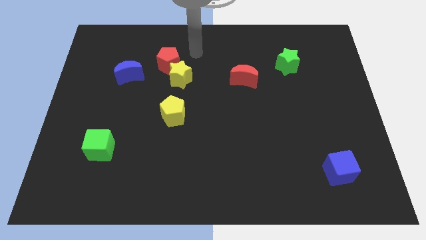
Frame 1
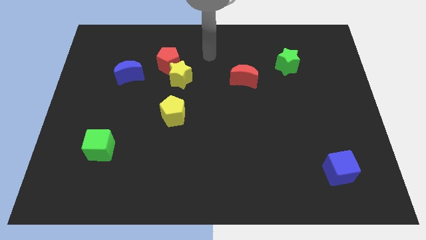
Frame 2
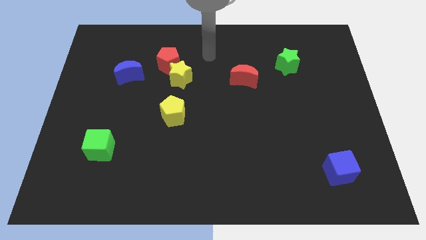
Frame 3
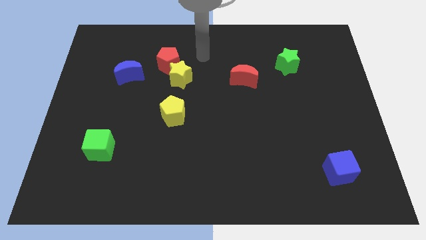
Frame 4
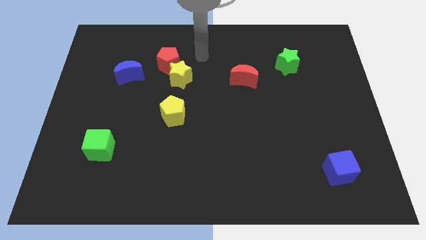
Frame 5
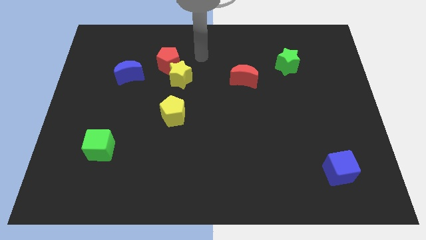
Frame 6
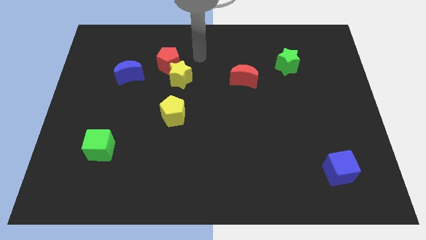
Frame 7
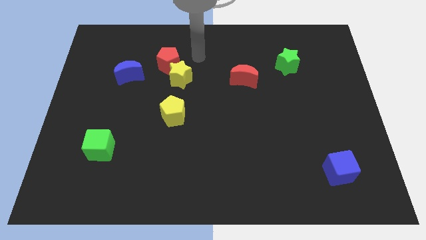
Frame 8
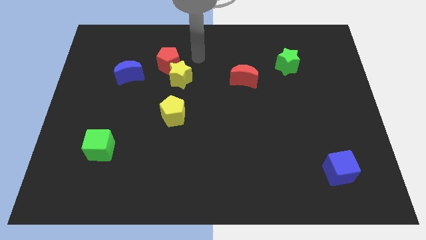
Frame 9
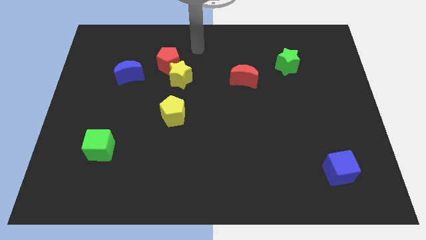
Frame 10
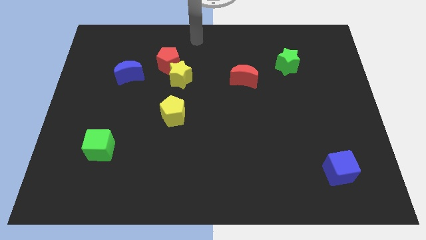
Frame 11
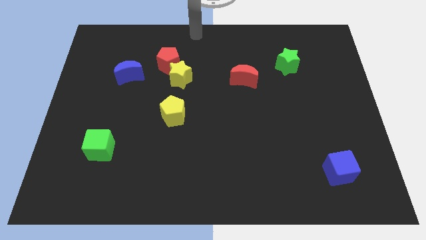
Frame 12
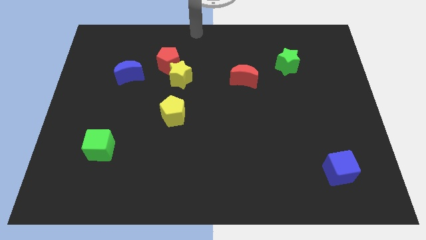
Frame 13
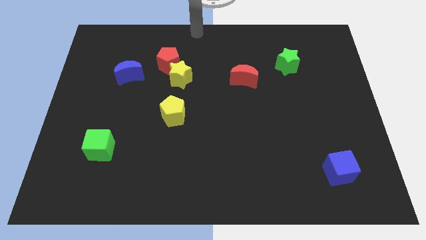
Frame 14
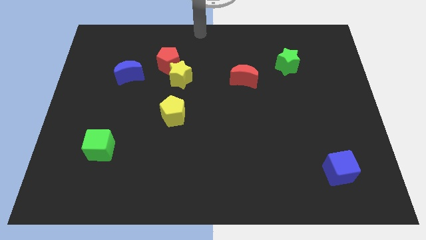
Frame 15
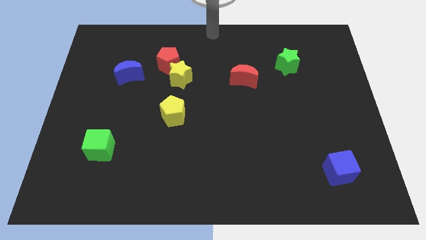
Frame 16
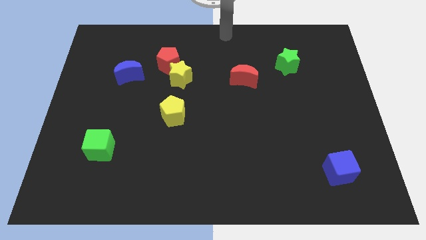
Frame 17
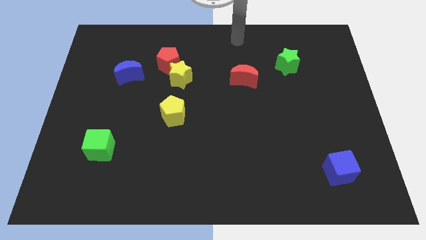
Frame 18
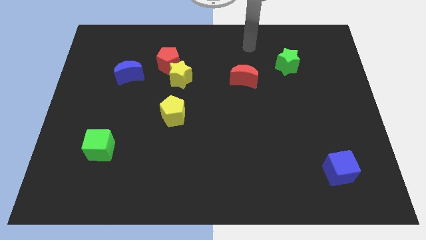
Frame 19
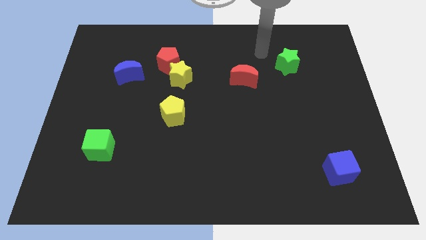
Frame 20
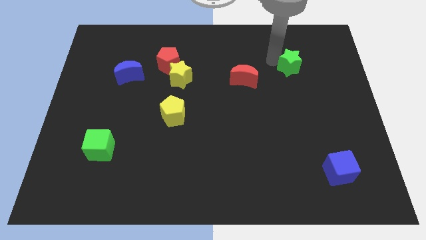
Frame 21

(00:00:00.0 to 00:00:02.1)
tap the green star

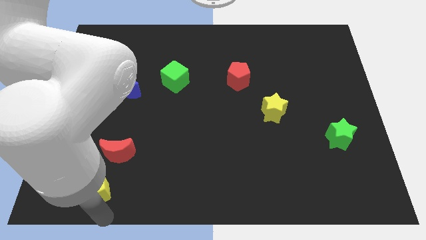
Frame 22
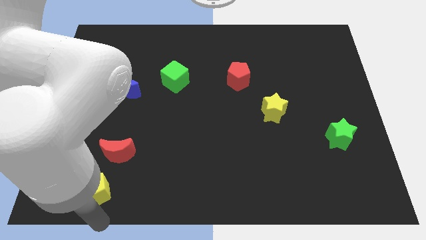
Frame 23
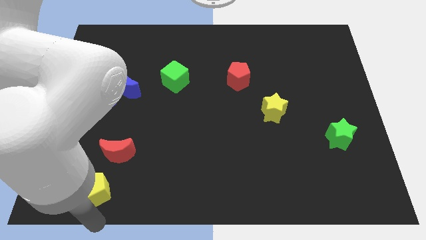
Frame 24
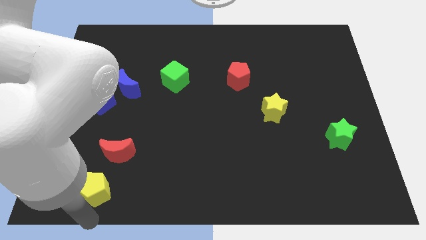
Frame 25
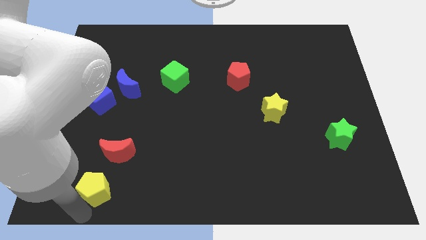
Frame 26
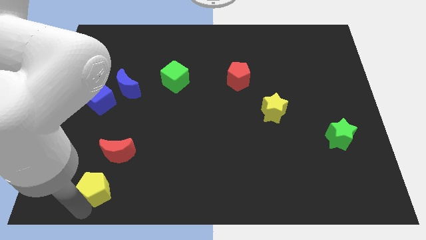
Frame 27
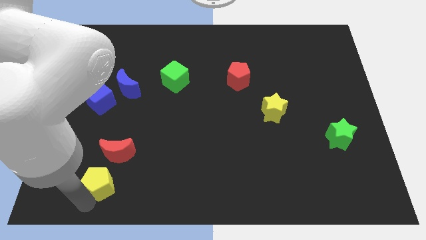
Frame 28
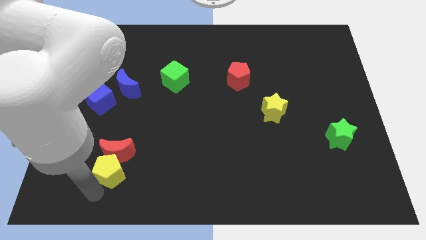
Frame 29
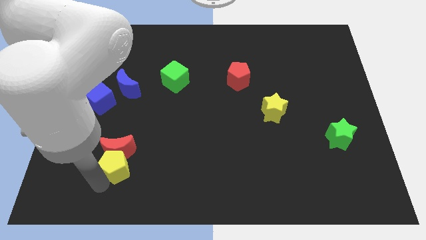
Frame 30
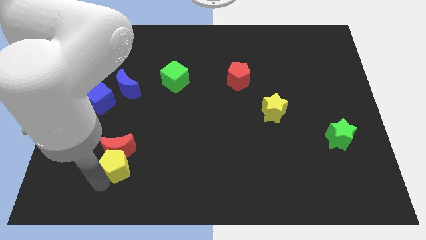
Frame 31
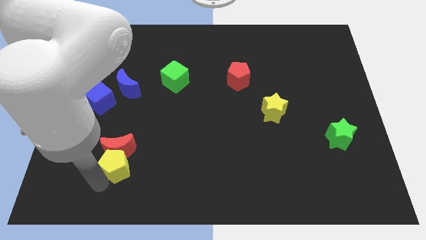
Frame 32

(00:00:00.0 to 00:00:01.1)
push yellow pentagon below red crescent

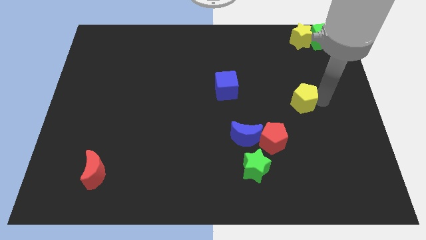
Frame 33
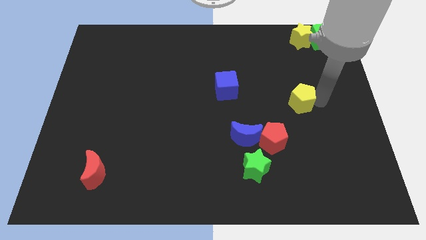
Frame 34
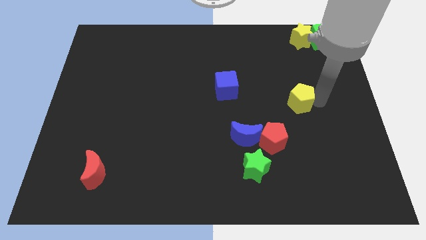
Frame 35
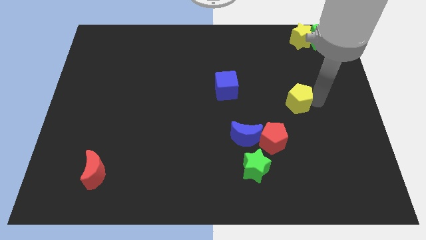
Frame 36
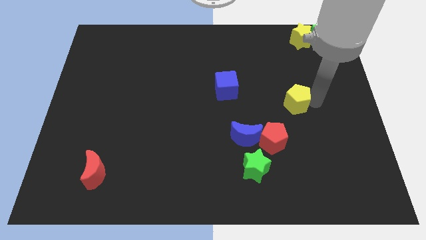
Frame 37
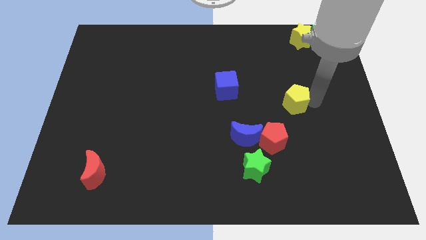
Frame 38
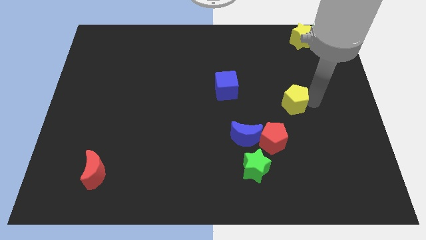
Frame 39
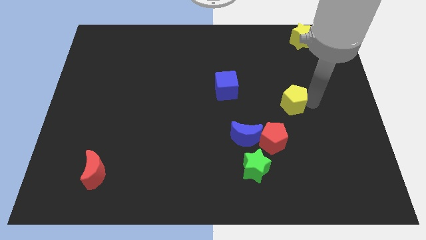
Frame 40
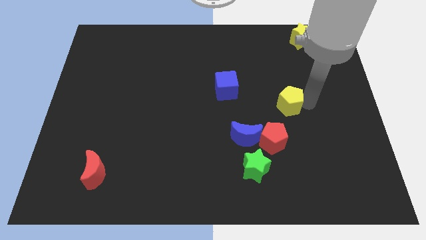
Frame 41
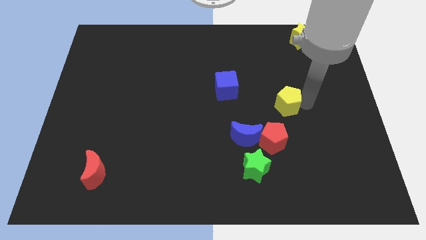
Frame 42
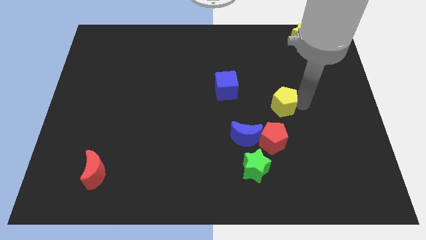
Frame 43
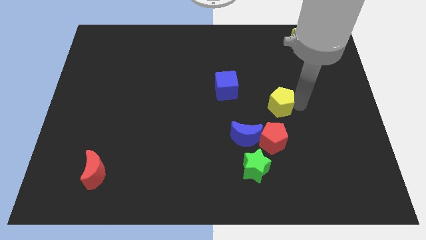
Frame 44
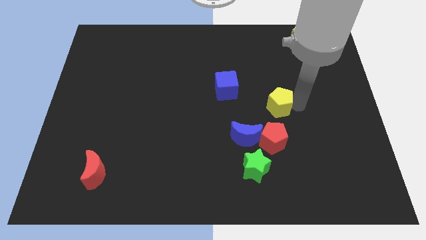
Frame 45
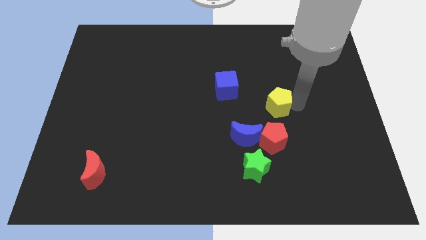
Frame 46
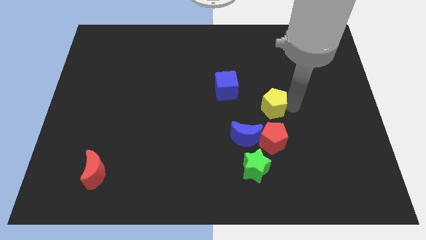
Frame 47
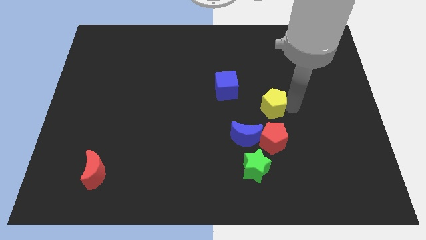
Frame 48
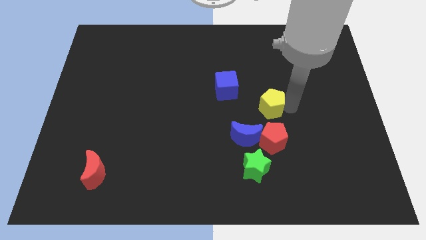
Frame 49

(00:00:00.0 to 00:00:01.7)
place the yellow pentagon at the top side of the red pentagon

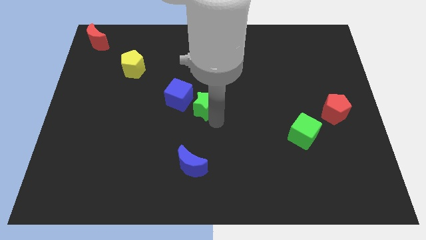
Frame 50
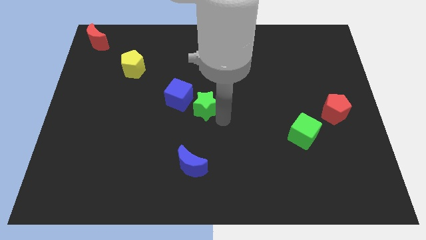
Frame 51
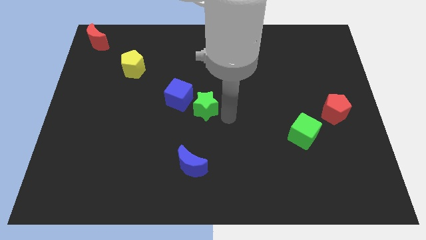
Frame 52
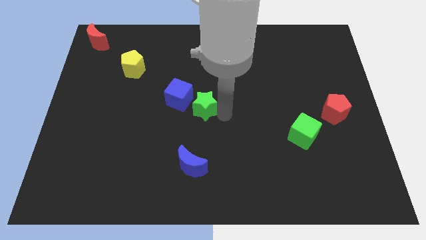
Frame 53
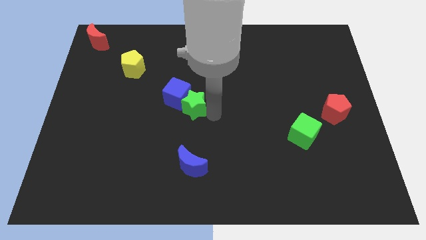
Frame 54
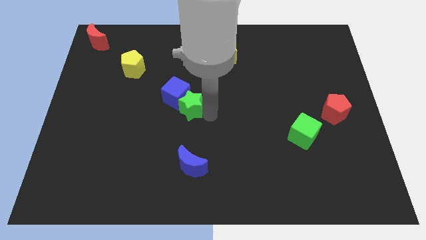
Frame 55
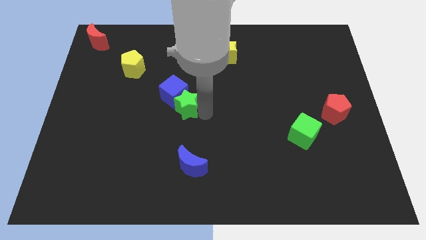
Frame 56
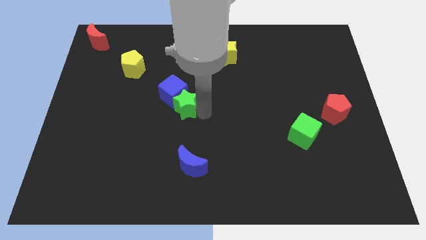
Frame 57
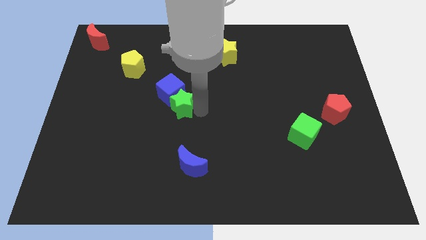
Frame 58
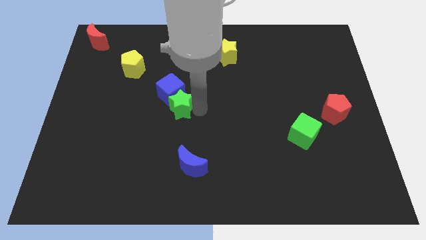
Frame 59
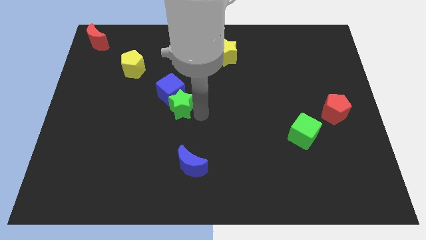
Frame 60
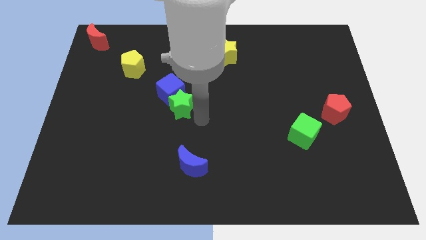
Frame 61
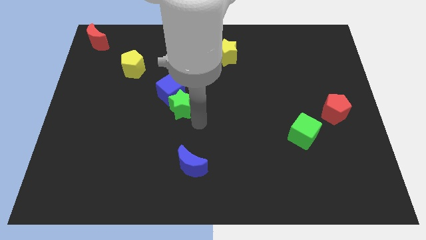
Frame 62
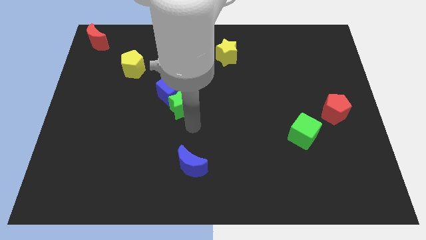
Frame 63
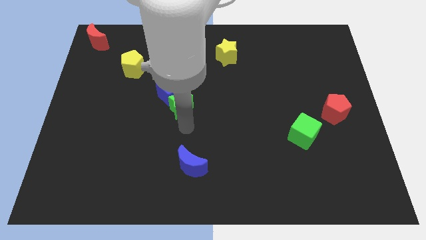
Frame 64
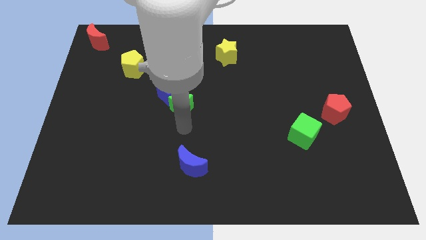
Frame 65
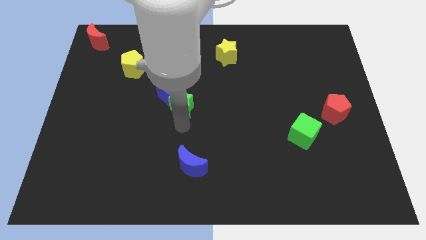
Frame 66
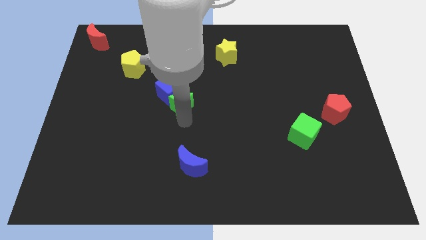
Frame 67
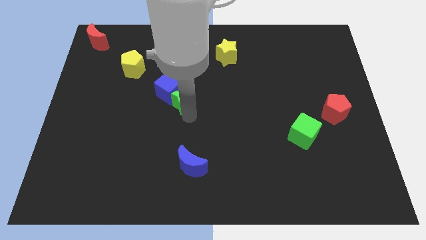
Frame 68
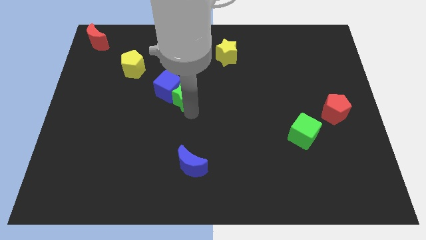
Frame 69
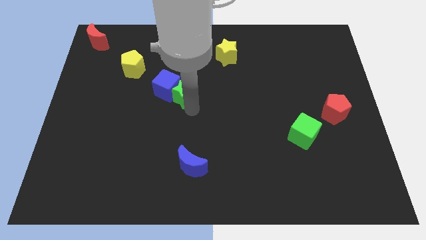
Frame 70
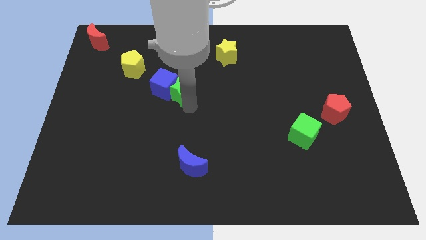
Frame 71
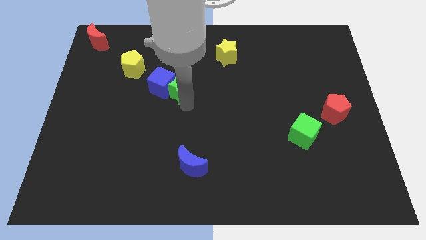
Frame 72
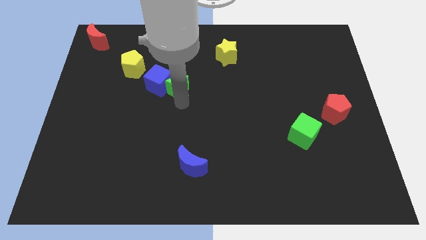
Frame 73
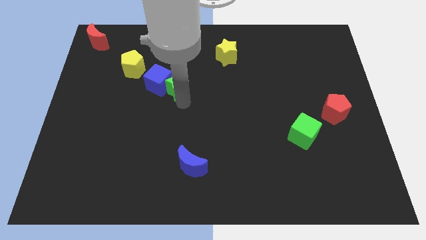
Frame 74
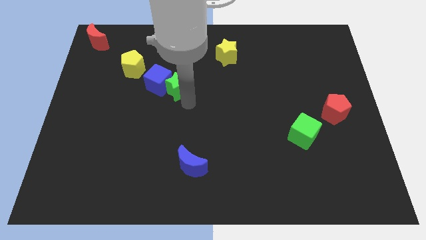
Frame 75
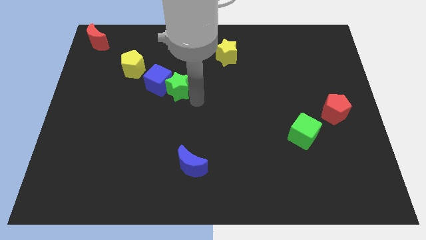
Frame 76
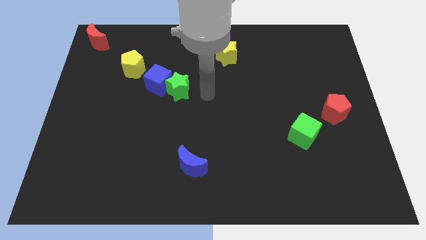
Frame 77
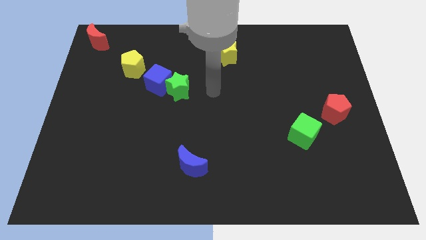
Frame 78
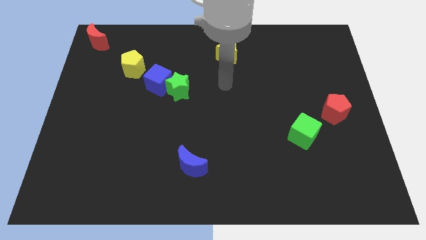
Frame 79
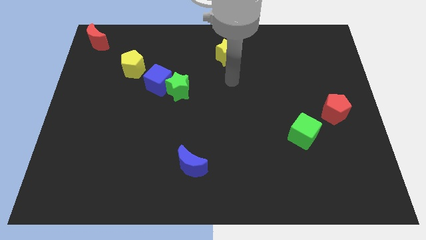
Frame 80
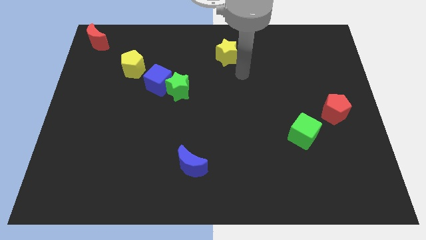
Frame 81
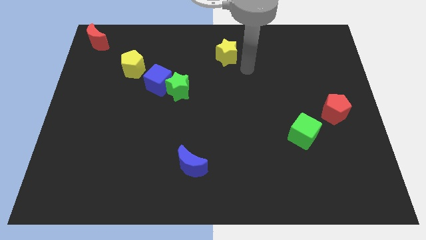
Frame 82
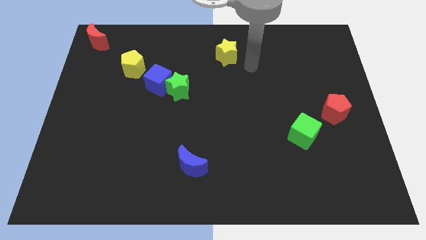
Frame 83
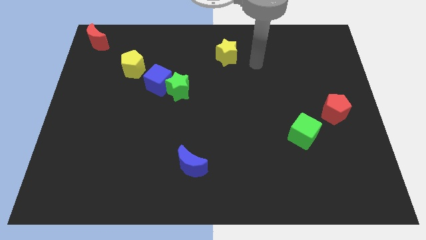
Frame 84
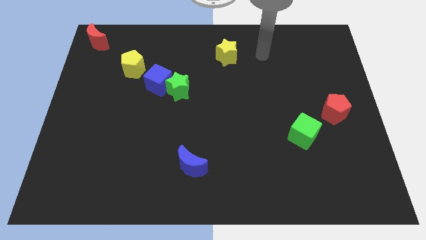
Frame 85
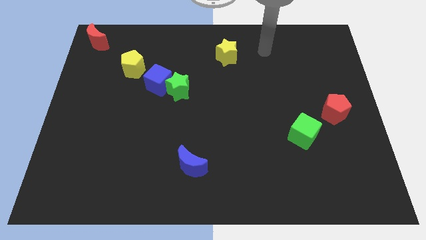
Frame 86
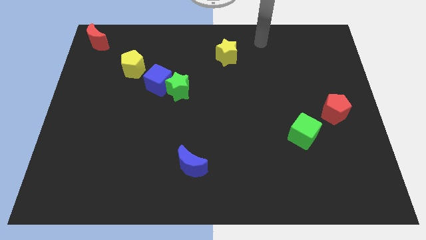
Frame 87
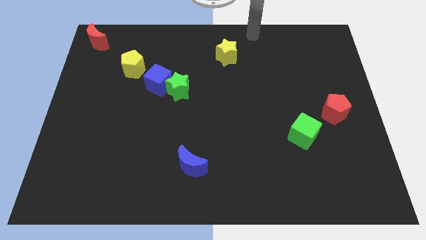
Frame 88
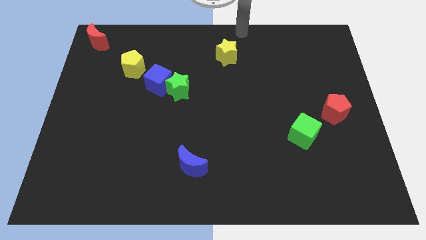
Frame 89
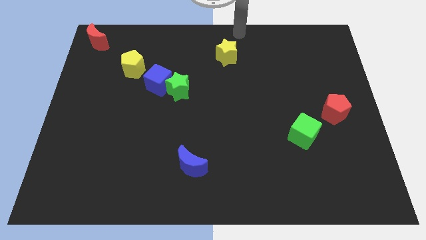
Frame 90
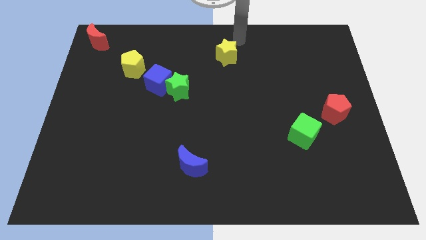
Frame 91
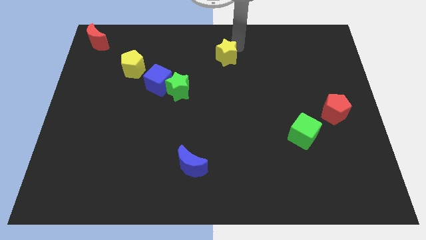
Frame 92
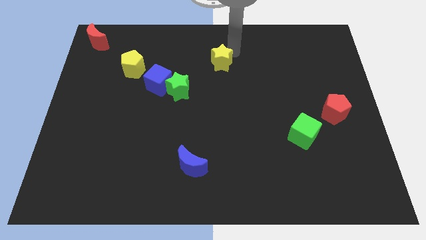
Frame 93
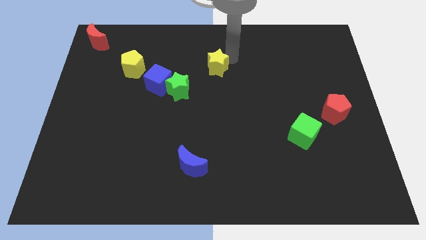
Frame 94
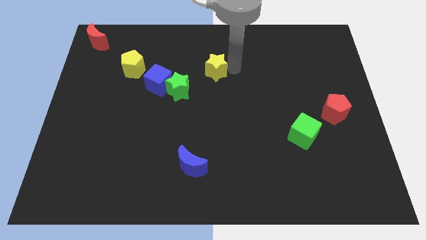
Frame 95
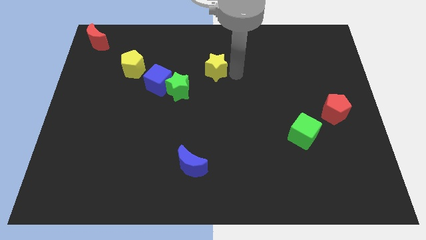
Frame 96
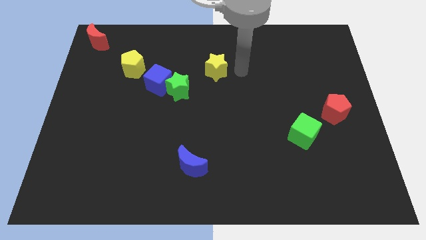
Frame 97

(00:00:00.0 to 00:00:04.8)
adjust the green star and blue cube
